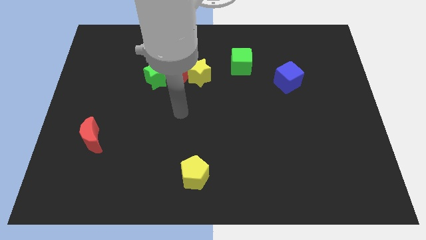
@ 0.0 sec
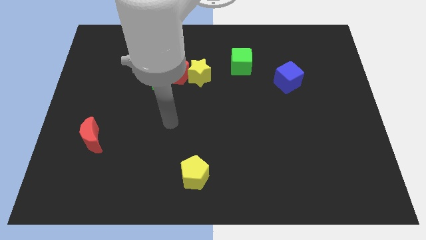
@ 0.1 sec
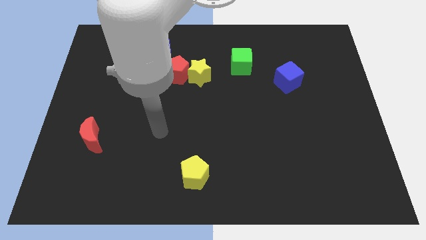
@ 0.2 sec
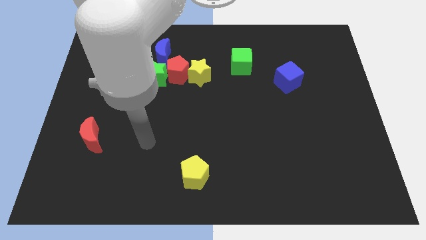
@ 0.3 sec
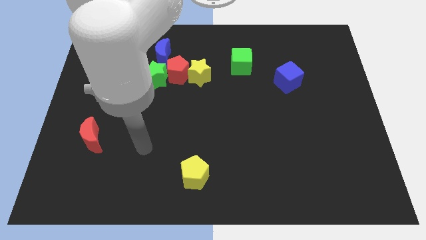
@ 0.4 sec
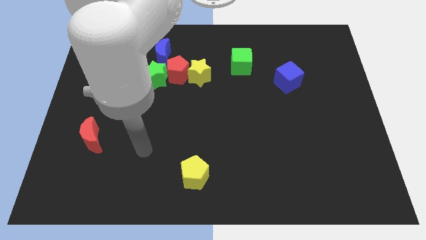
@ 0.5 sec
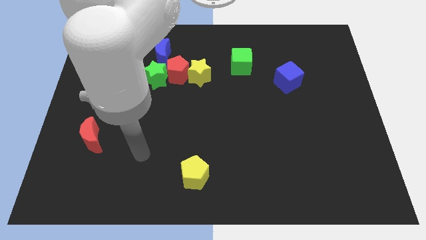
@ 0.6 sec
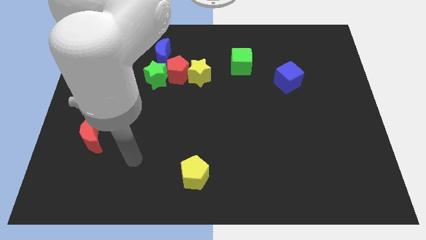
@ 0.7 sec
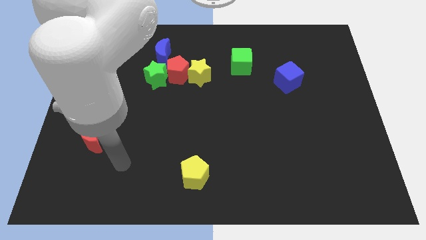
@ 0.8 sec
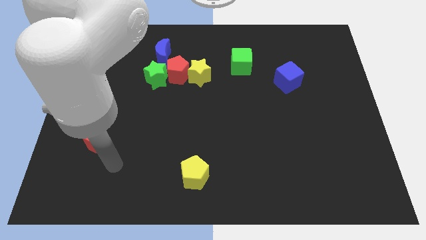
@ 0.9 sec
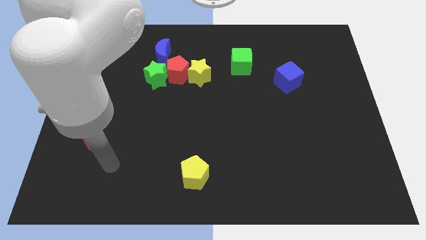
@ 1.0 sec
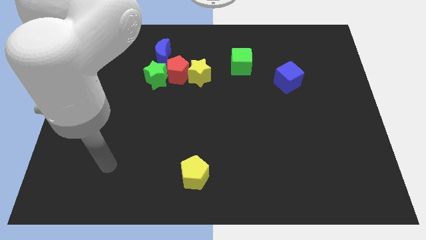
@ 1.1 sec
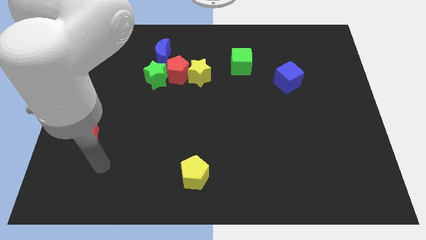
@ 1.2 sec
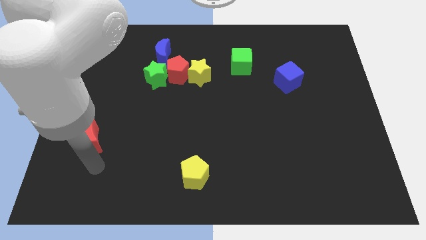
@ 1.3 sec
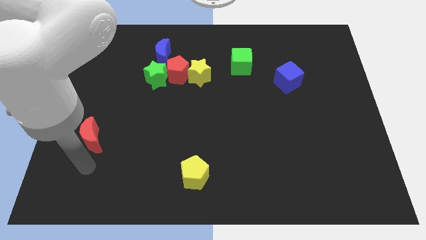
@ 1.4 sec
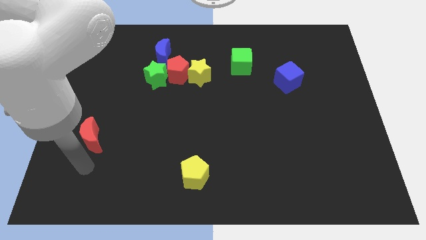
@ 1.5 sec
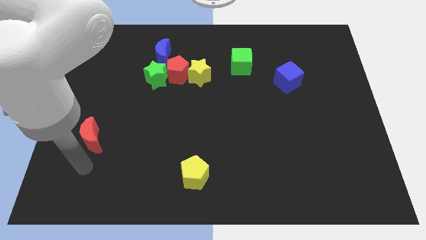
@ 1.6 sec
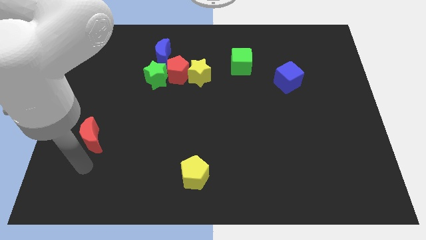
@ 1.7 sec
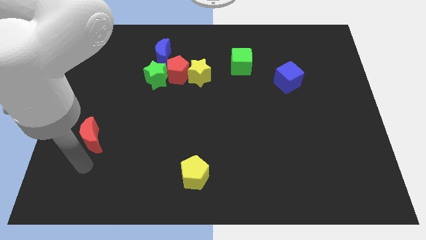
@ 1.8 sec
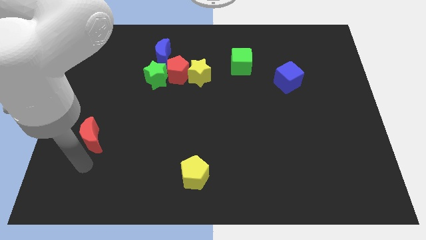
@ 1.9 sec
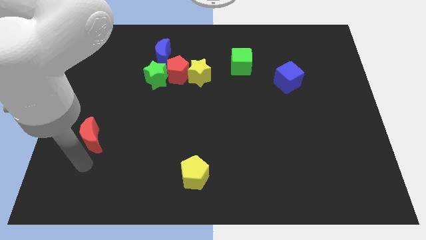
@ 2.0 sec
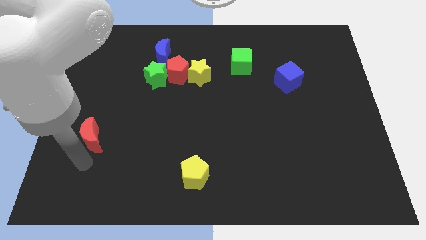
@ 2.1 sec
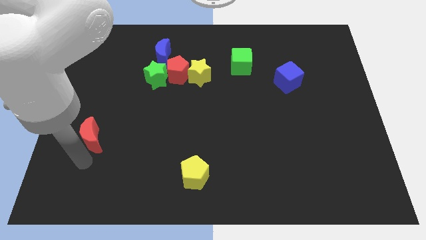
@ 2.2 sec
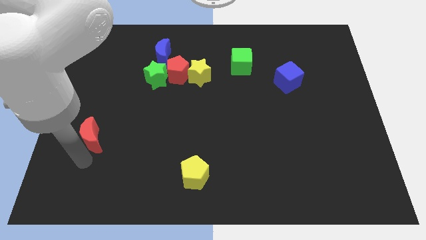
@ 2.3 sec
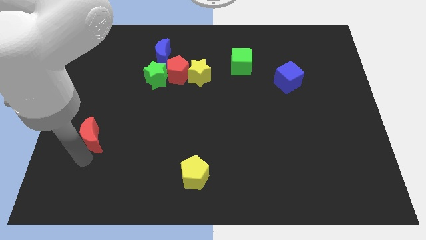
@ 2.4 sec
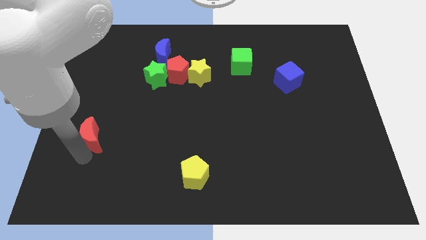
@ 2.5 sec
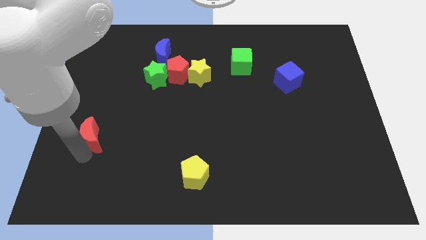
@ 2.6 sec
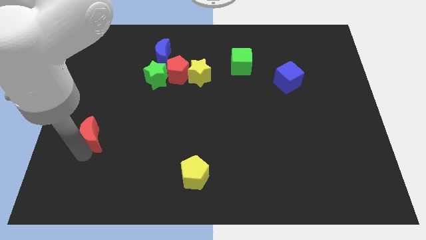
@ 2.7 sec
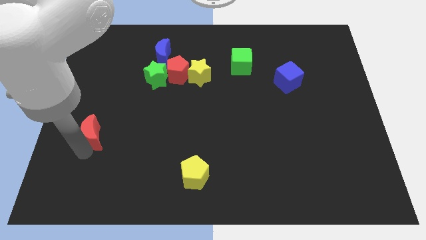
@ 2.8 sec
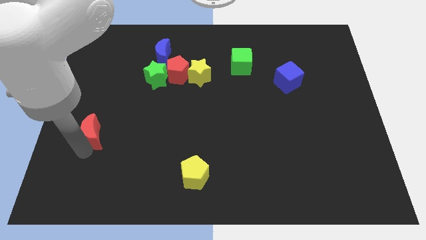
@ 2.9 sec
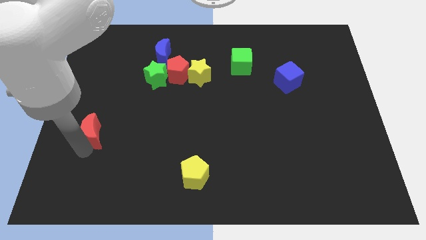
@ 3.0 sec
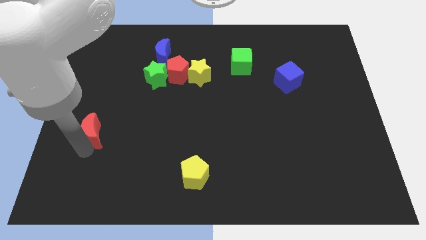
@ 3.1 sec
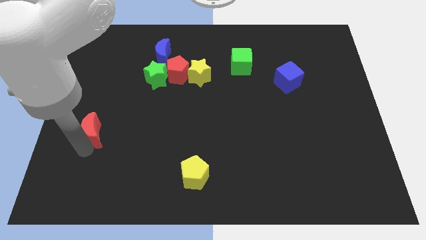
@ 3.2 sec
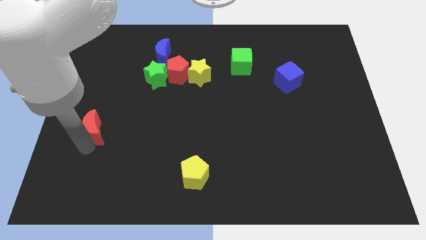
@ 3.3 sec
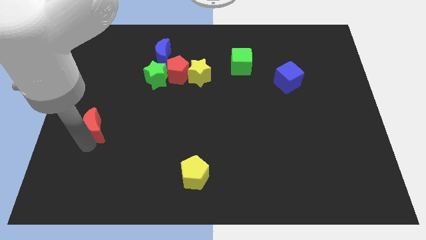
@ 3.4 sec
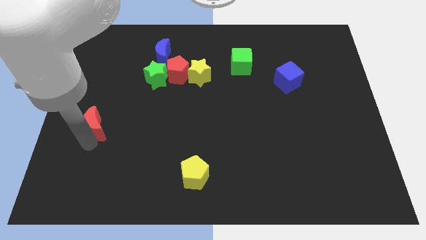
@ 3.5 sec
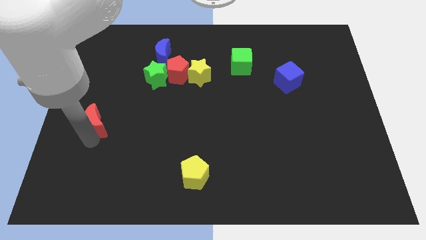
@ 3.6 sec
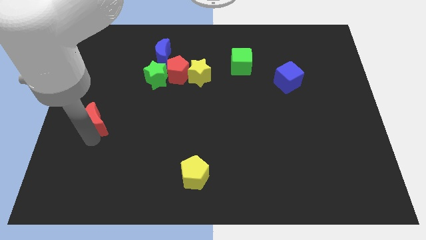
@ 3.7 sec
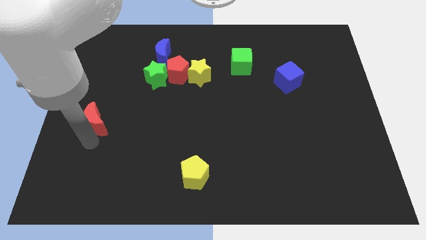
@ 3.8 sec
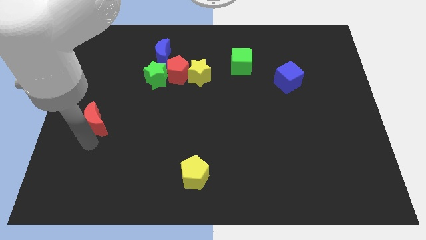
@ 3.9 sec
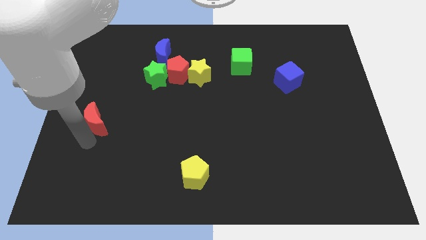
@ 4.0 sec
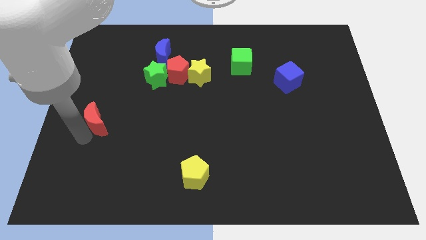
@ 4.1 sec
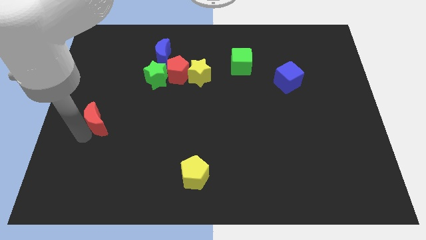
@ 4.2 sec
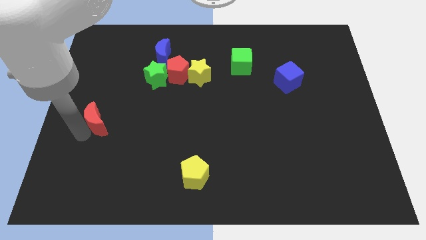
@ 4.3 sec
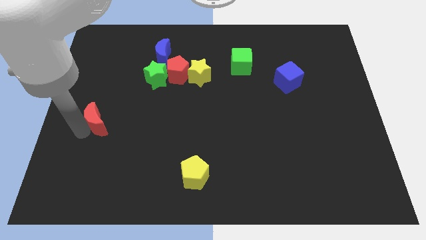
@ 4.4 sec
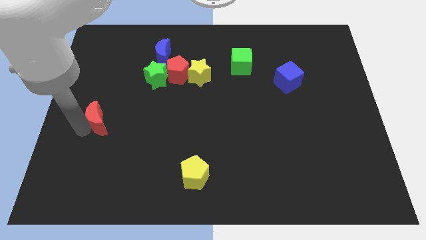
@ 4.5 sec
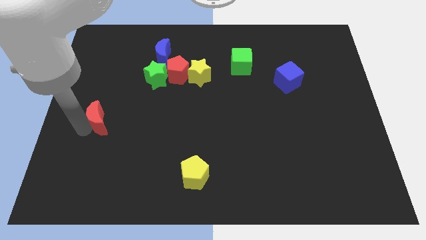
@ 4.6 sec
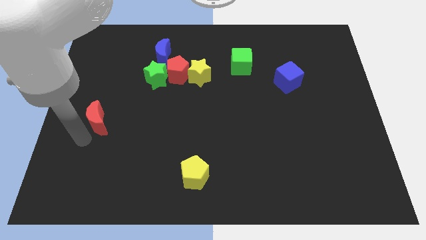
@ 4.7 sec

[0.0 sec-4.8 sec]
push the red moon diagonally on the bottom left side of the green star

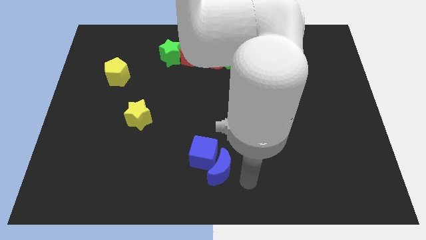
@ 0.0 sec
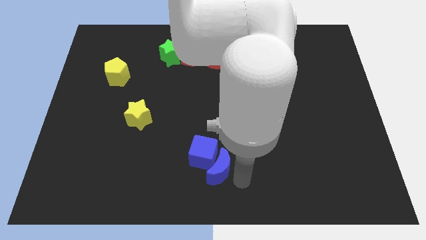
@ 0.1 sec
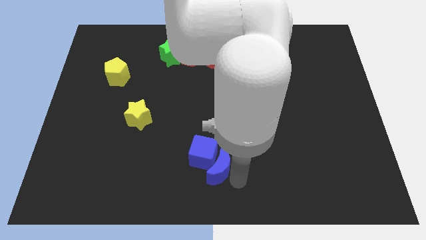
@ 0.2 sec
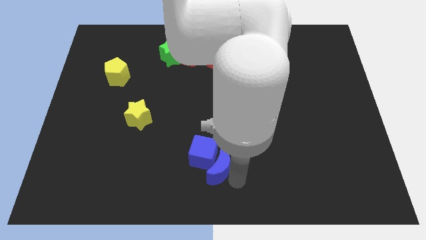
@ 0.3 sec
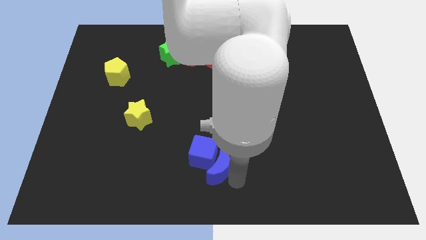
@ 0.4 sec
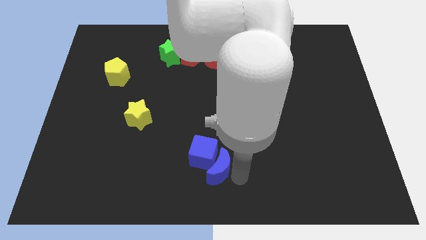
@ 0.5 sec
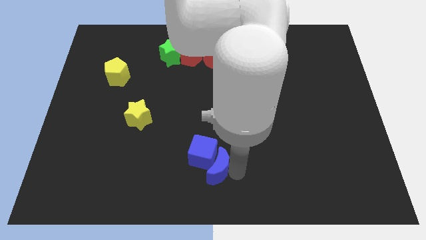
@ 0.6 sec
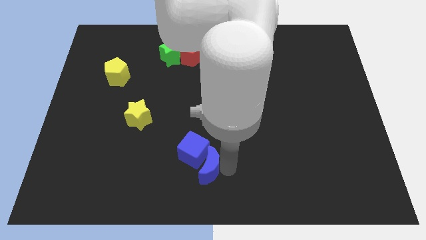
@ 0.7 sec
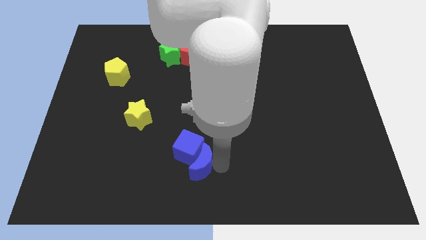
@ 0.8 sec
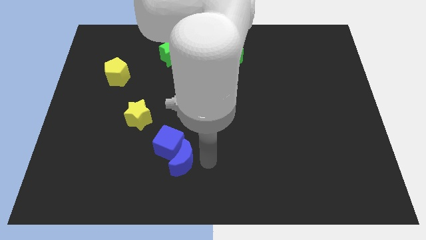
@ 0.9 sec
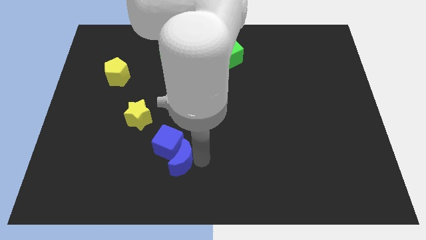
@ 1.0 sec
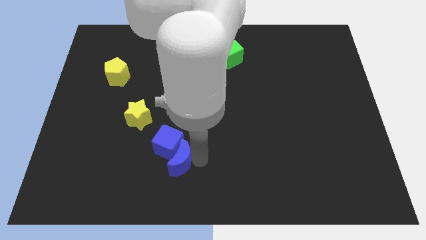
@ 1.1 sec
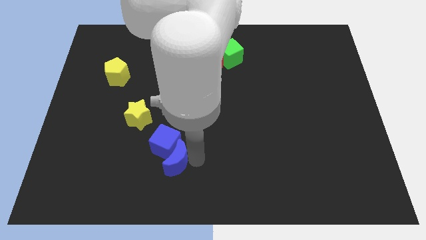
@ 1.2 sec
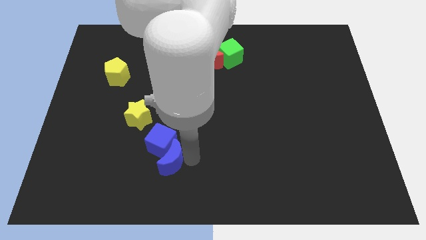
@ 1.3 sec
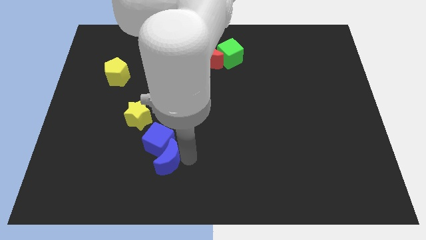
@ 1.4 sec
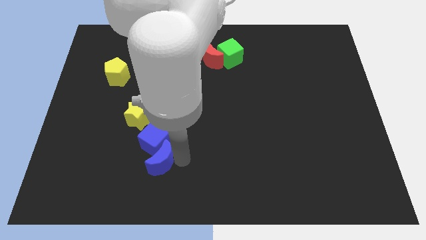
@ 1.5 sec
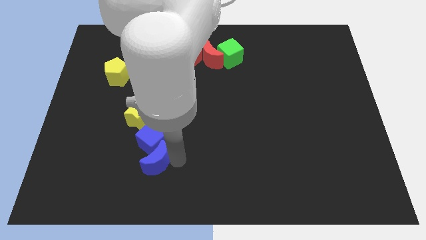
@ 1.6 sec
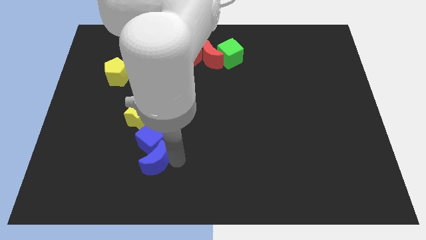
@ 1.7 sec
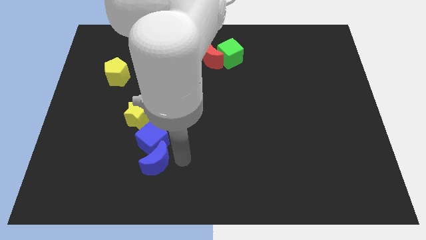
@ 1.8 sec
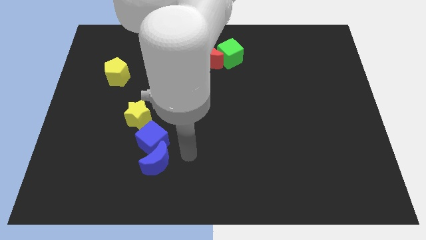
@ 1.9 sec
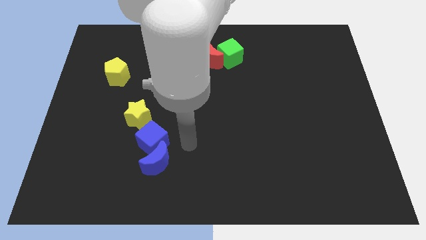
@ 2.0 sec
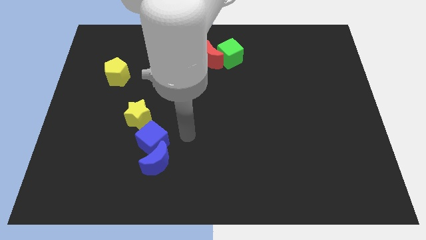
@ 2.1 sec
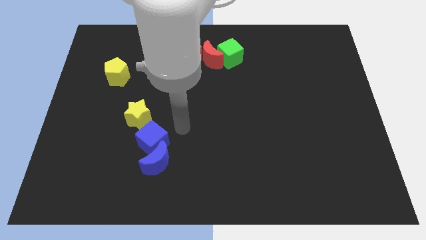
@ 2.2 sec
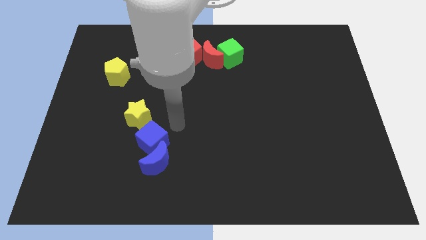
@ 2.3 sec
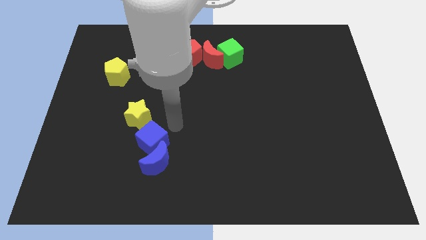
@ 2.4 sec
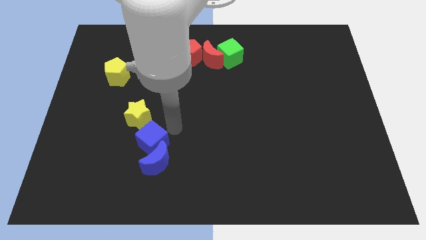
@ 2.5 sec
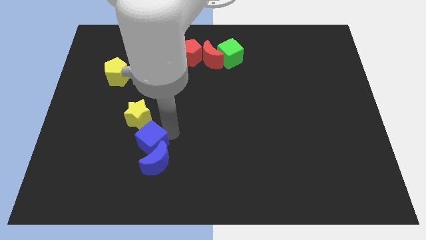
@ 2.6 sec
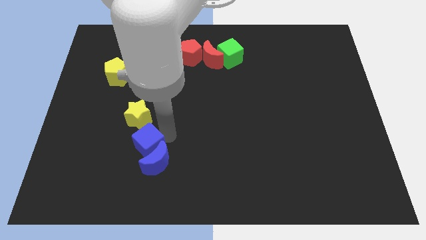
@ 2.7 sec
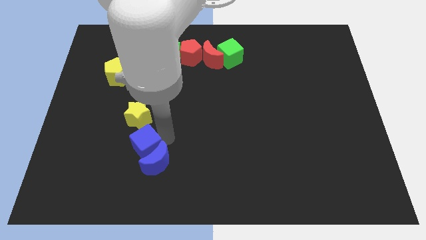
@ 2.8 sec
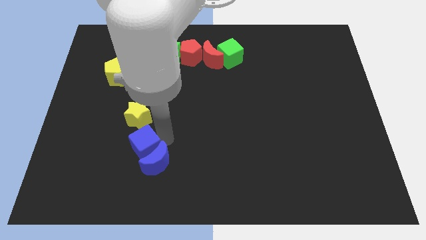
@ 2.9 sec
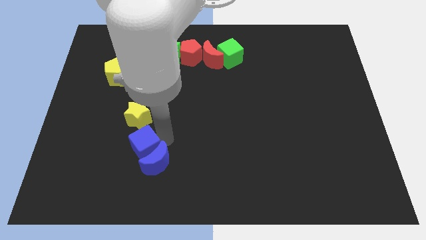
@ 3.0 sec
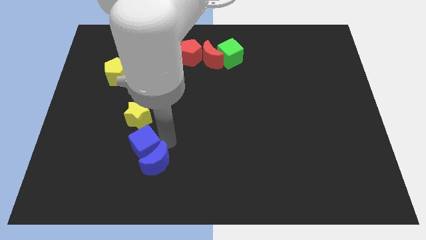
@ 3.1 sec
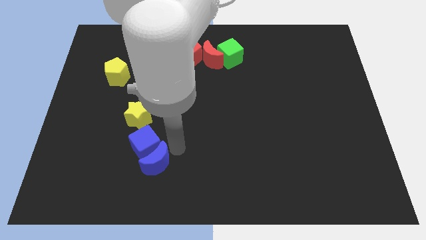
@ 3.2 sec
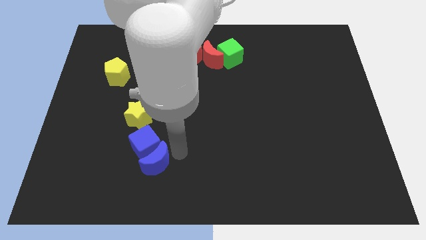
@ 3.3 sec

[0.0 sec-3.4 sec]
push blue moon and blue cube at the bottom of the yellow star

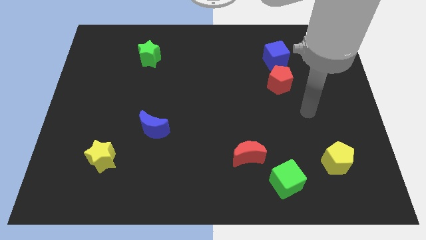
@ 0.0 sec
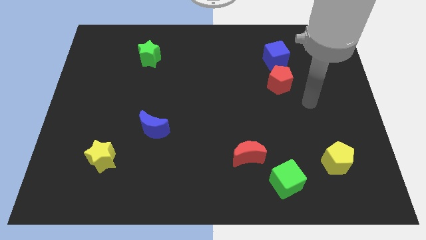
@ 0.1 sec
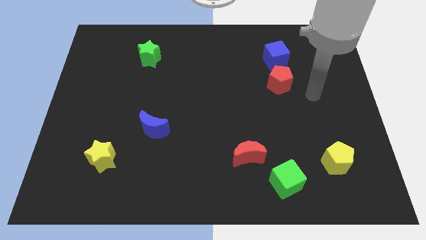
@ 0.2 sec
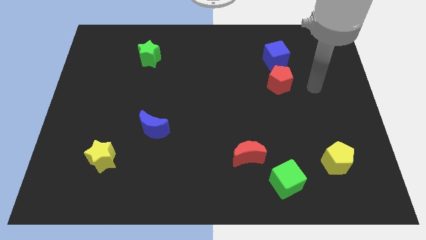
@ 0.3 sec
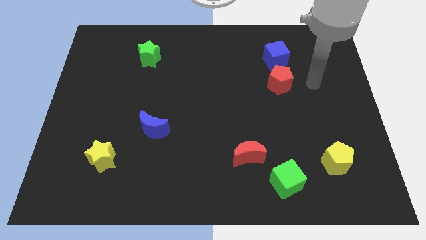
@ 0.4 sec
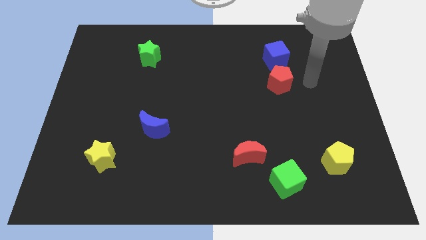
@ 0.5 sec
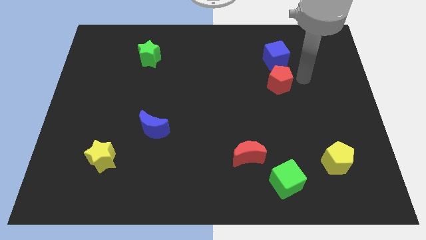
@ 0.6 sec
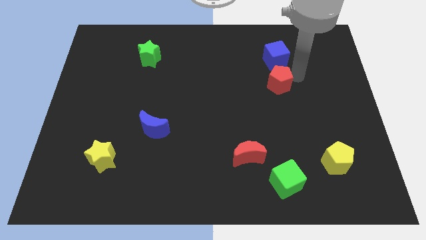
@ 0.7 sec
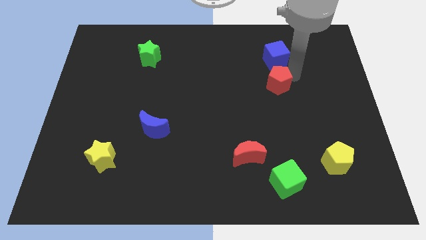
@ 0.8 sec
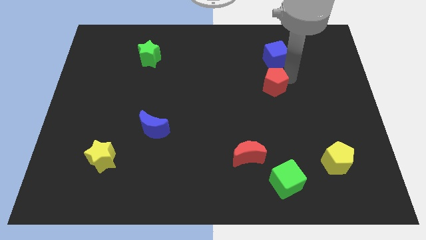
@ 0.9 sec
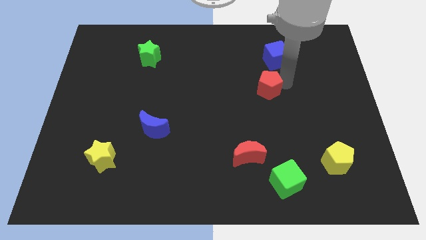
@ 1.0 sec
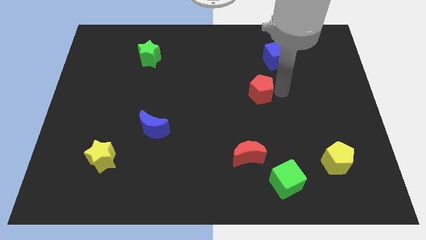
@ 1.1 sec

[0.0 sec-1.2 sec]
push the red pentagon away from the blue cube
